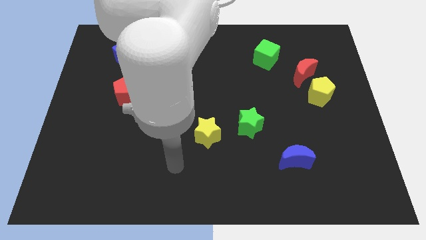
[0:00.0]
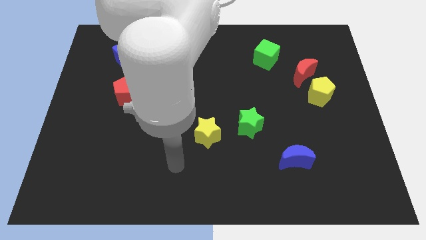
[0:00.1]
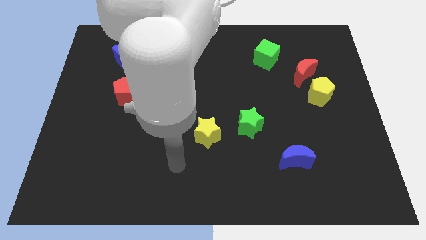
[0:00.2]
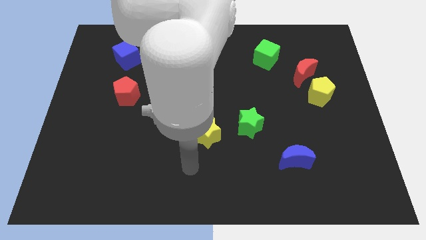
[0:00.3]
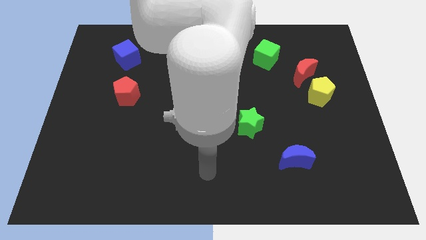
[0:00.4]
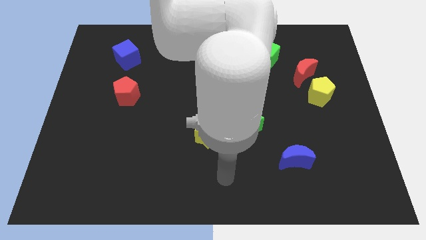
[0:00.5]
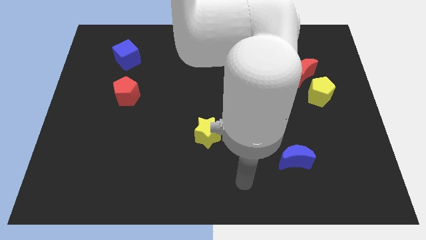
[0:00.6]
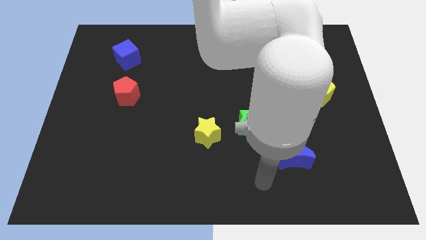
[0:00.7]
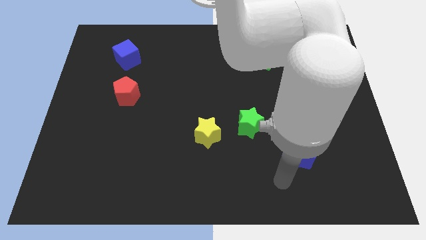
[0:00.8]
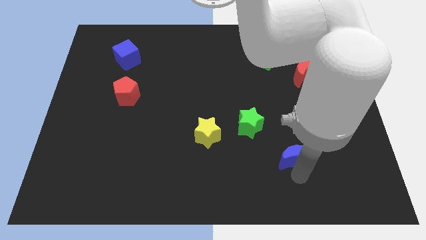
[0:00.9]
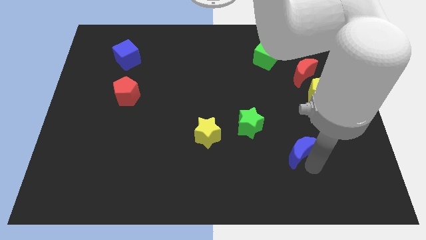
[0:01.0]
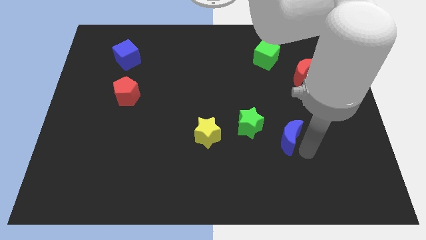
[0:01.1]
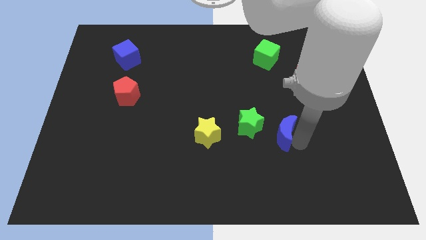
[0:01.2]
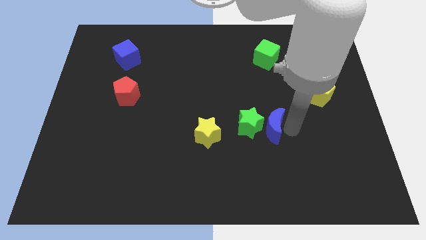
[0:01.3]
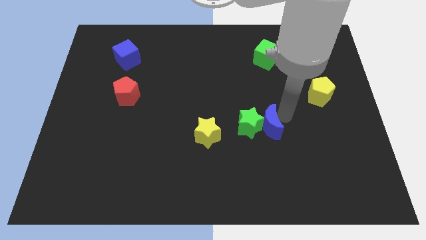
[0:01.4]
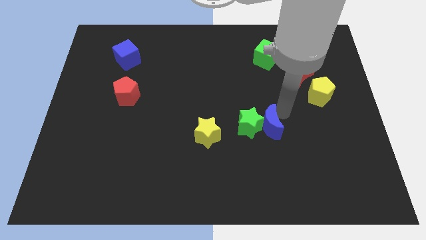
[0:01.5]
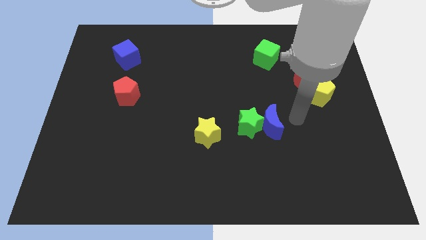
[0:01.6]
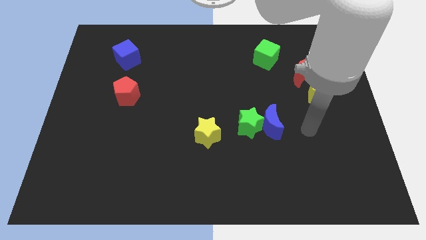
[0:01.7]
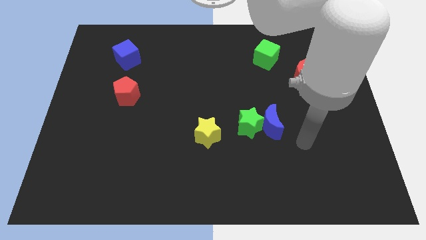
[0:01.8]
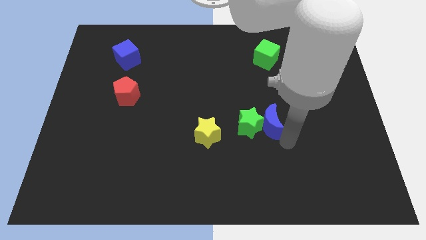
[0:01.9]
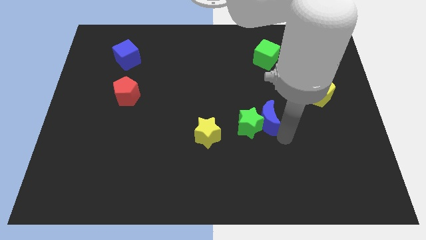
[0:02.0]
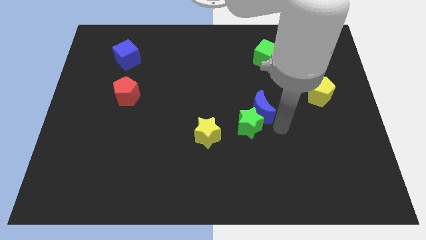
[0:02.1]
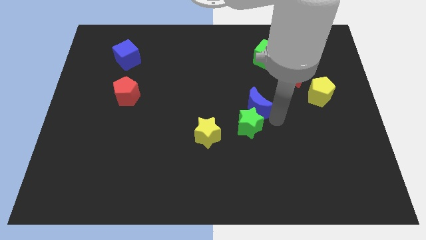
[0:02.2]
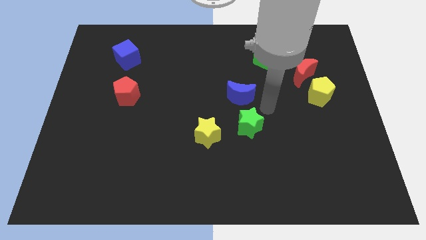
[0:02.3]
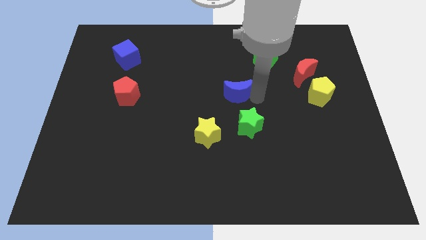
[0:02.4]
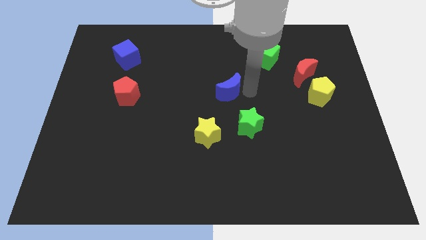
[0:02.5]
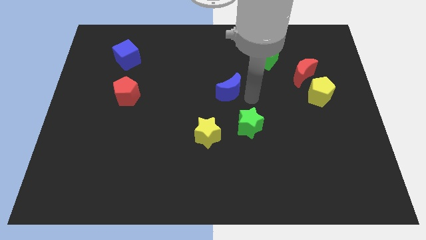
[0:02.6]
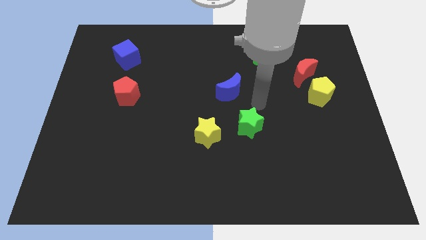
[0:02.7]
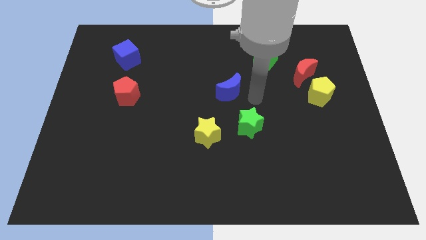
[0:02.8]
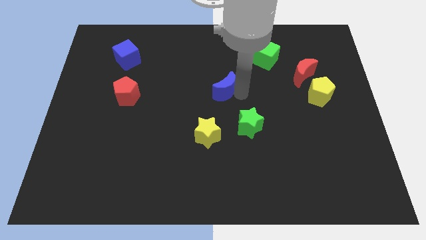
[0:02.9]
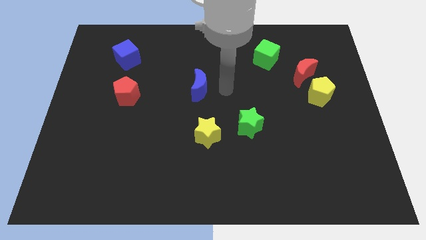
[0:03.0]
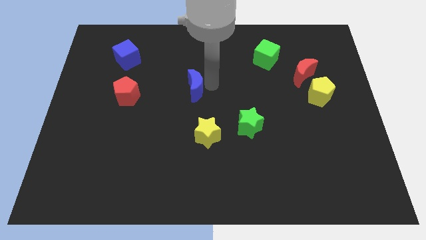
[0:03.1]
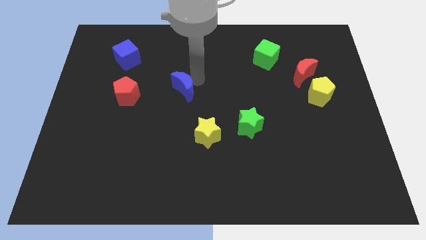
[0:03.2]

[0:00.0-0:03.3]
move the blue crescent to the right of the red pentagon

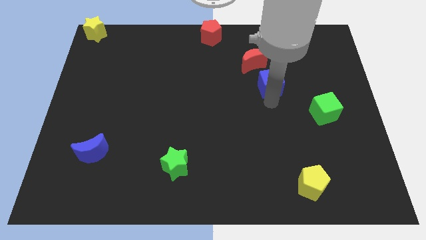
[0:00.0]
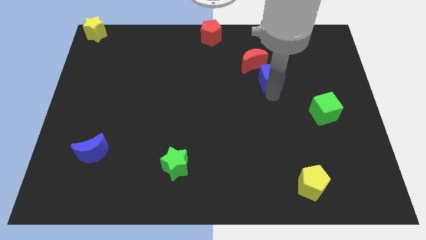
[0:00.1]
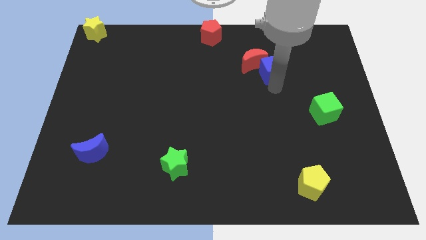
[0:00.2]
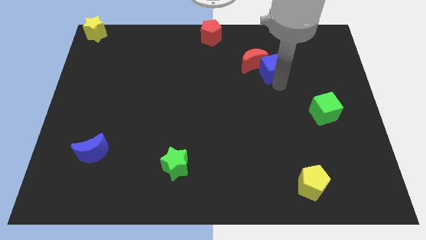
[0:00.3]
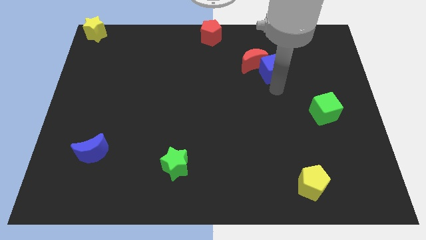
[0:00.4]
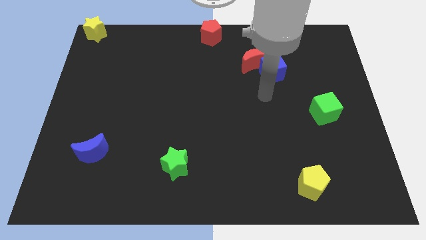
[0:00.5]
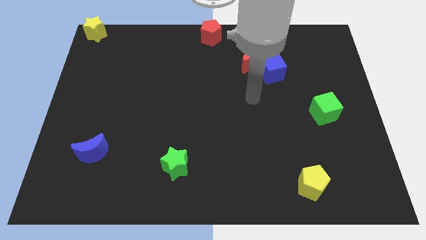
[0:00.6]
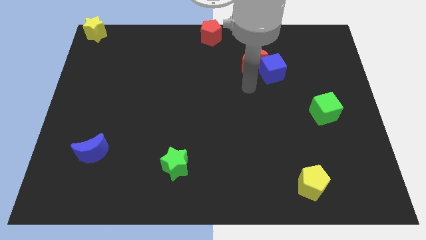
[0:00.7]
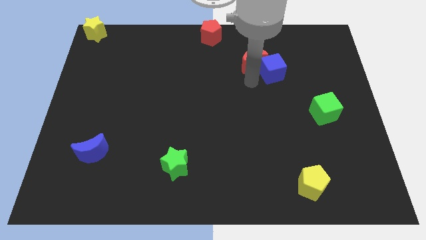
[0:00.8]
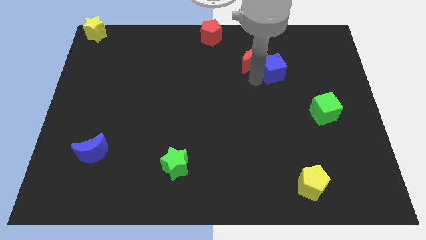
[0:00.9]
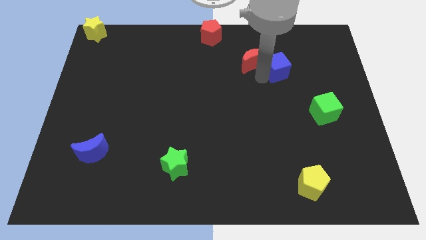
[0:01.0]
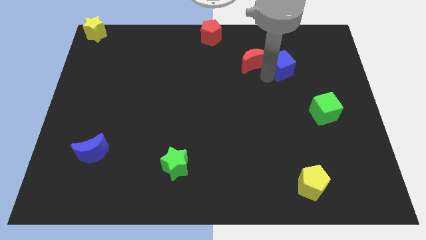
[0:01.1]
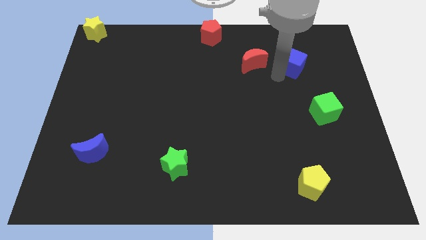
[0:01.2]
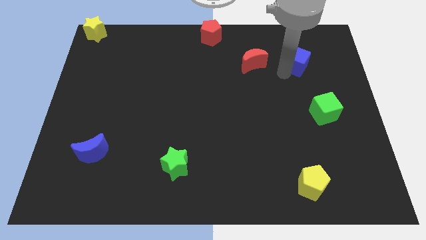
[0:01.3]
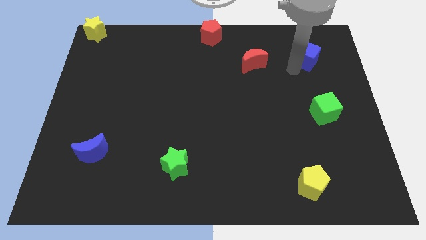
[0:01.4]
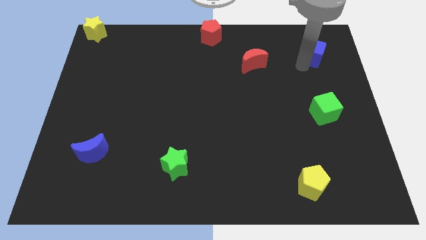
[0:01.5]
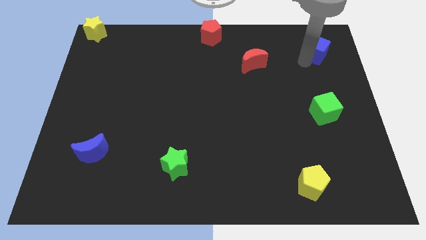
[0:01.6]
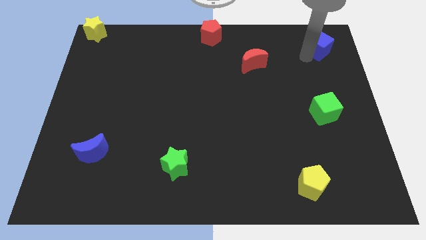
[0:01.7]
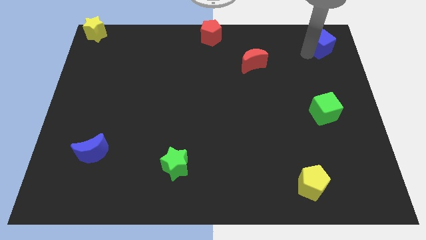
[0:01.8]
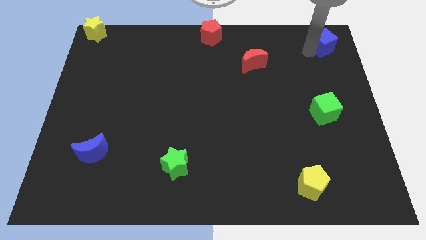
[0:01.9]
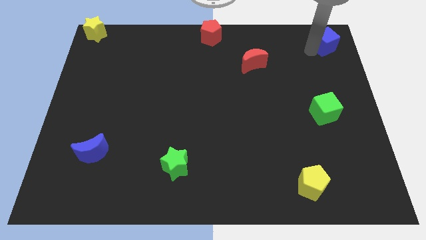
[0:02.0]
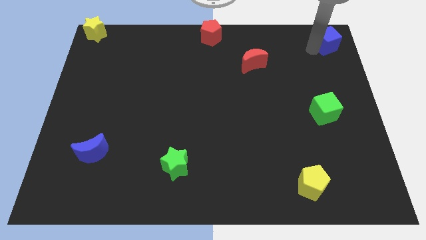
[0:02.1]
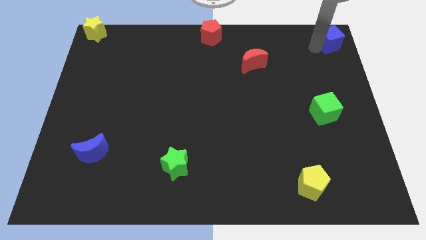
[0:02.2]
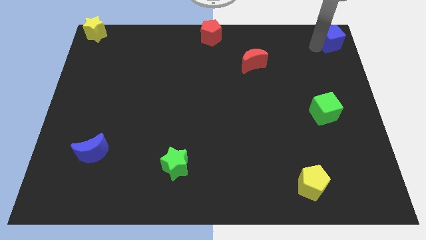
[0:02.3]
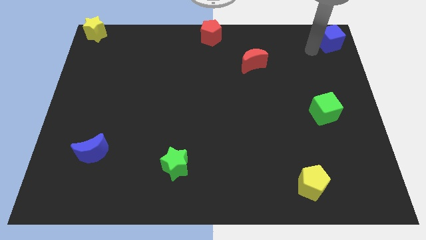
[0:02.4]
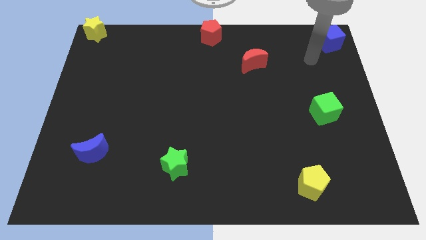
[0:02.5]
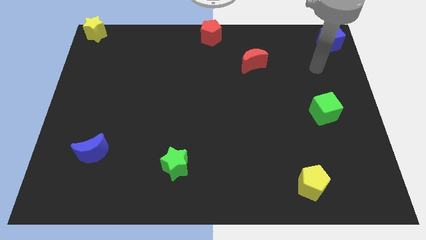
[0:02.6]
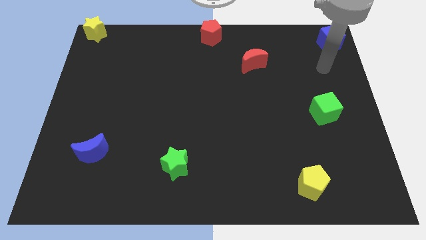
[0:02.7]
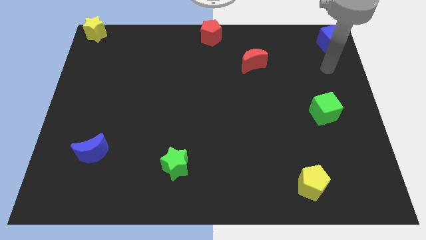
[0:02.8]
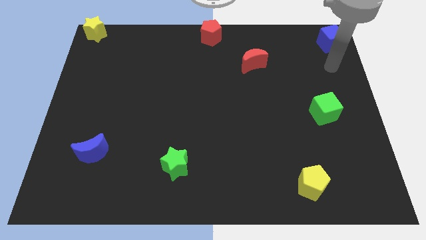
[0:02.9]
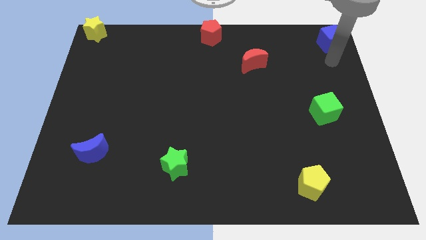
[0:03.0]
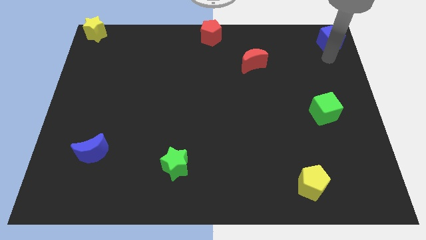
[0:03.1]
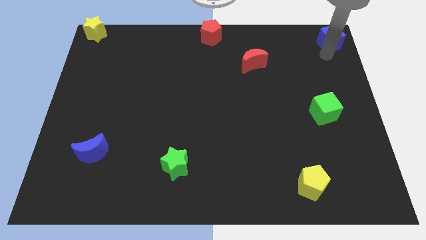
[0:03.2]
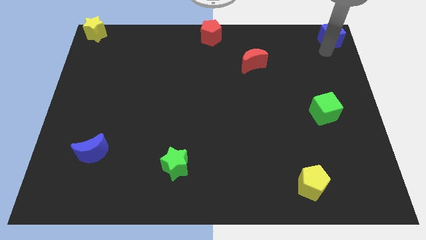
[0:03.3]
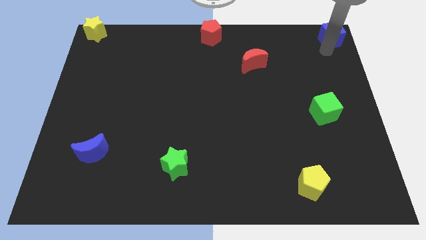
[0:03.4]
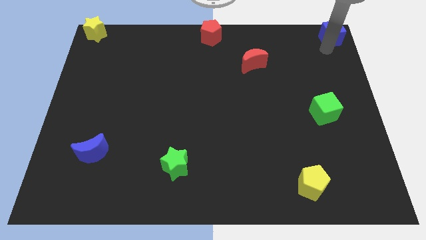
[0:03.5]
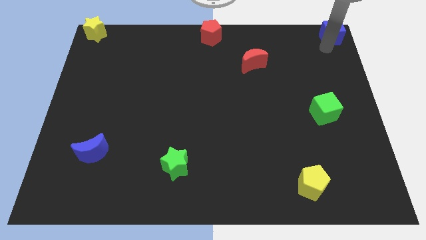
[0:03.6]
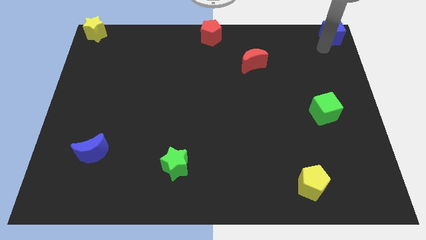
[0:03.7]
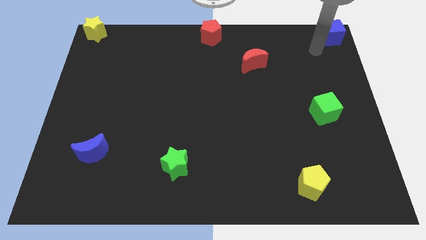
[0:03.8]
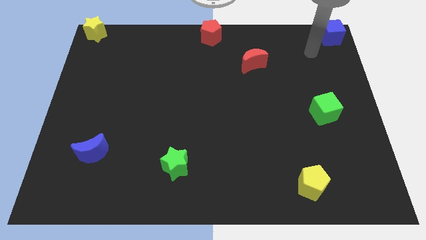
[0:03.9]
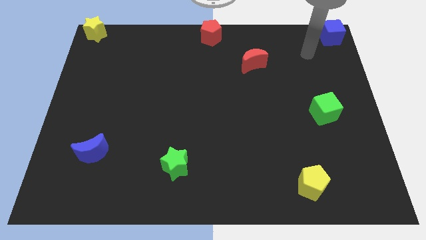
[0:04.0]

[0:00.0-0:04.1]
place the blue cube at the top right corner of the board

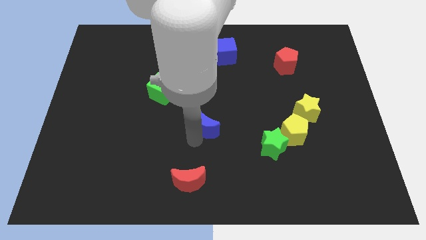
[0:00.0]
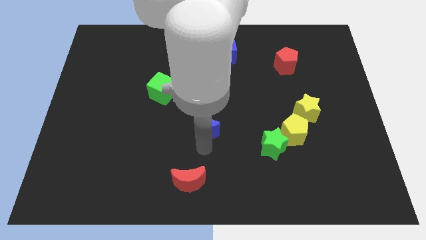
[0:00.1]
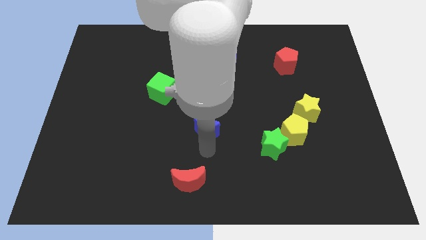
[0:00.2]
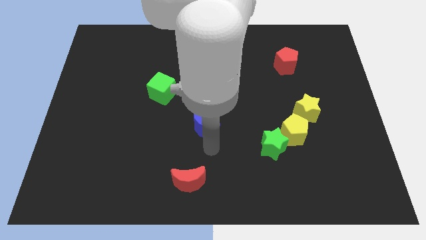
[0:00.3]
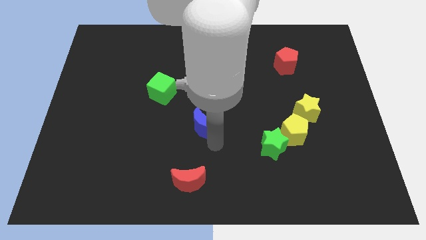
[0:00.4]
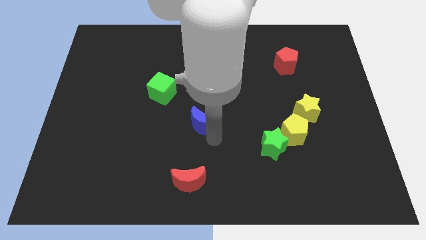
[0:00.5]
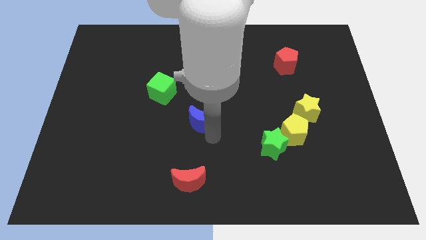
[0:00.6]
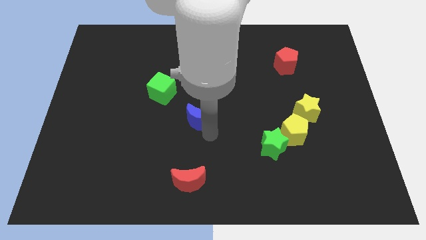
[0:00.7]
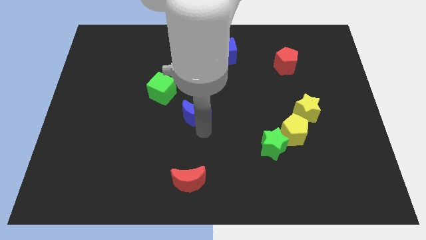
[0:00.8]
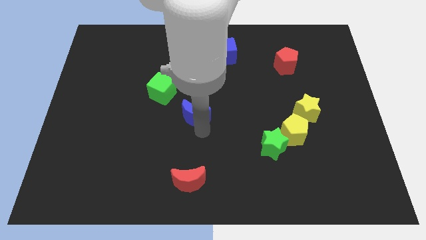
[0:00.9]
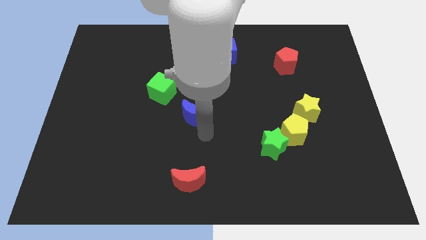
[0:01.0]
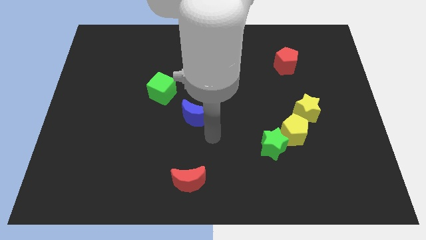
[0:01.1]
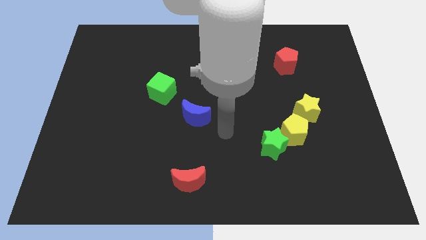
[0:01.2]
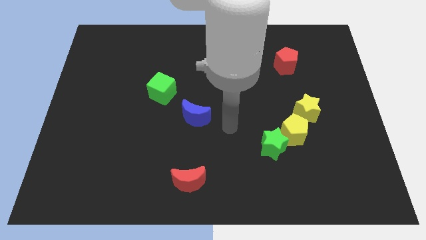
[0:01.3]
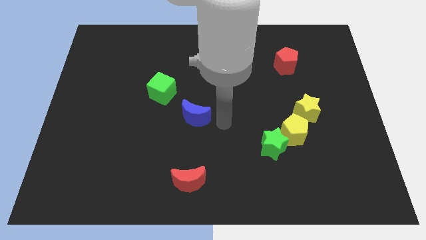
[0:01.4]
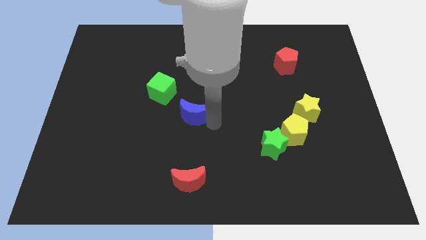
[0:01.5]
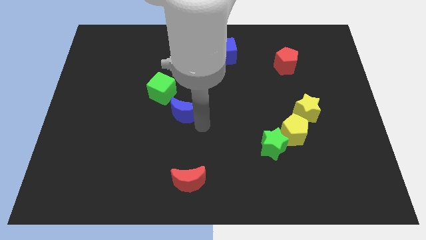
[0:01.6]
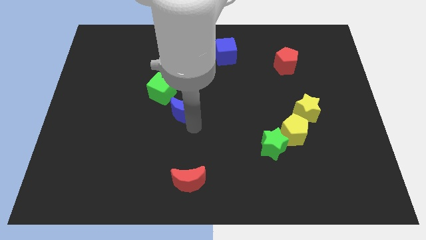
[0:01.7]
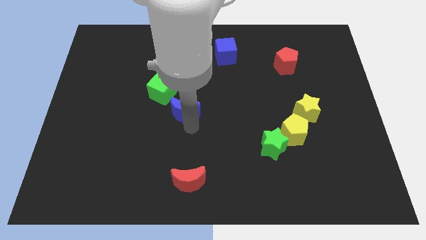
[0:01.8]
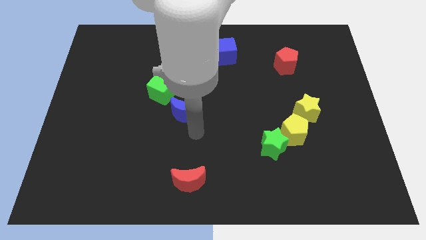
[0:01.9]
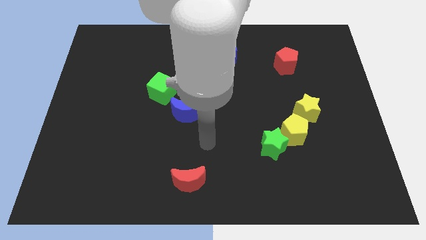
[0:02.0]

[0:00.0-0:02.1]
push blue moon towards green cube
